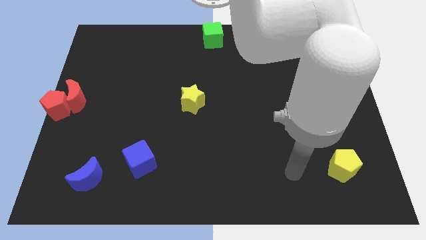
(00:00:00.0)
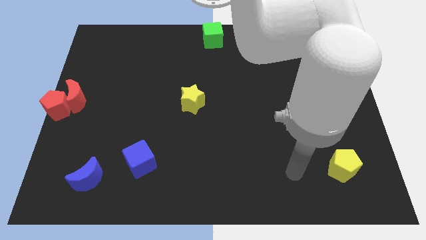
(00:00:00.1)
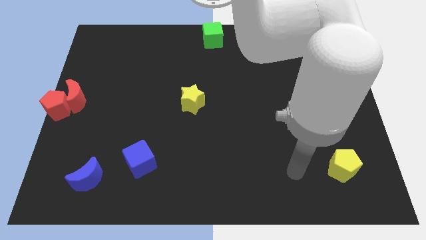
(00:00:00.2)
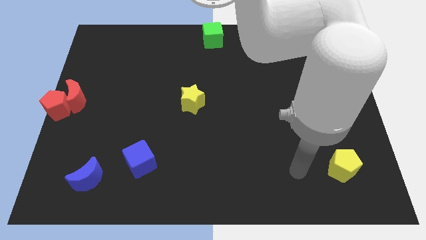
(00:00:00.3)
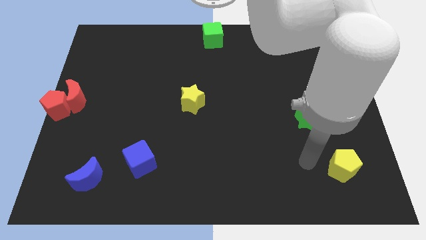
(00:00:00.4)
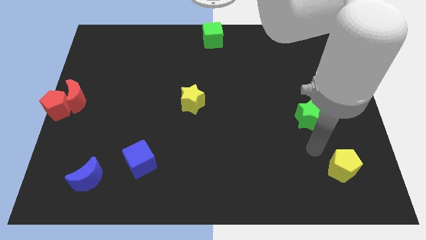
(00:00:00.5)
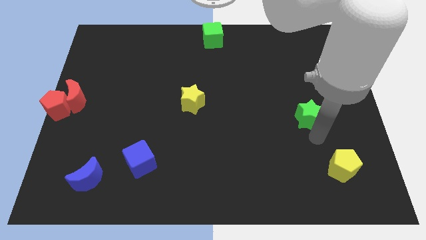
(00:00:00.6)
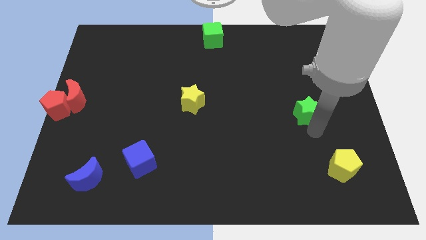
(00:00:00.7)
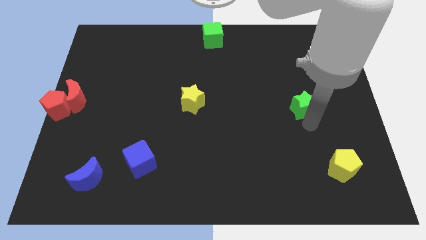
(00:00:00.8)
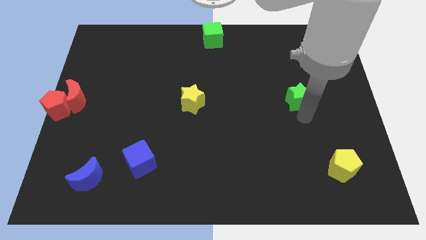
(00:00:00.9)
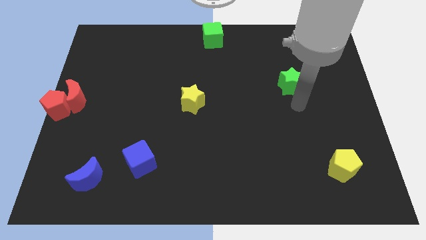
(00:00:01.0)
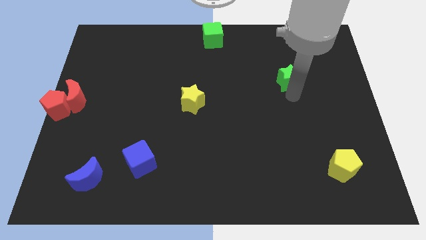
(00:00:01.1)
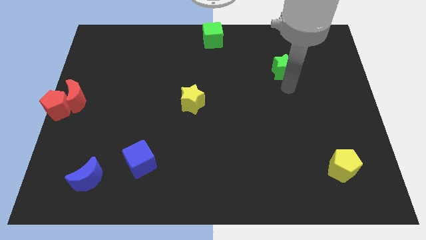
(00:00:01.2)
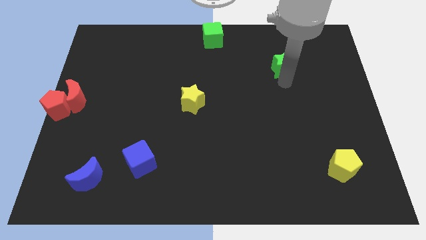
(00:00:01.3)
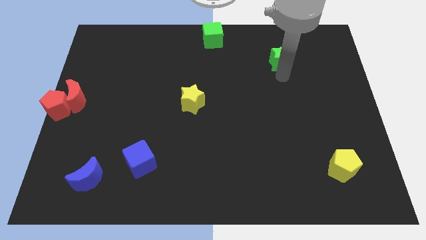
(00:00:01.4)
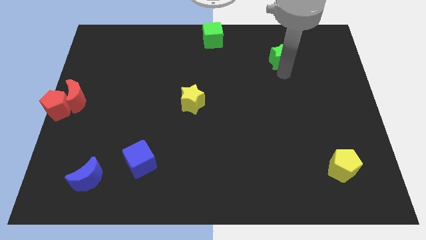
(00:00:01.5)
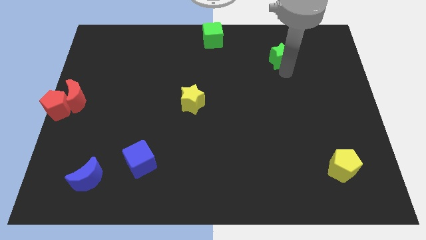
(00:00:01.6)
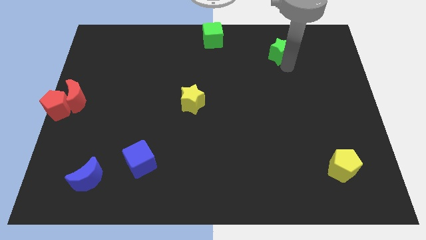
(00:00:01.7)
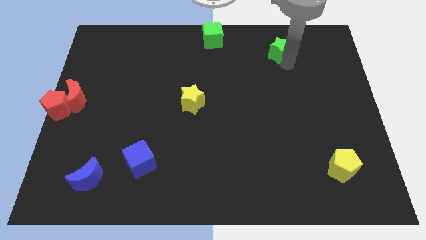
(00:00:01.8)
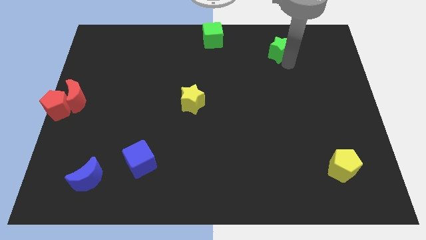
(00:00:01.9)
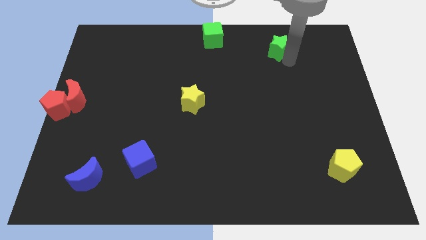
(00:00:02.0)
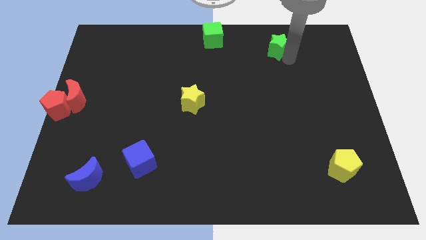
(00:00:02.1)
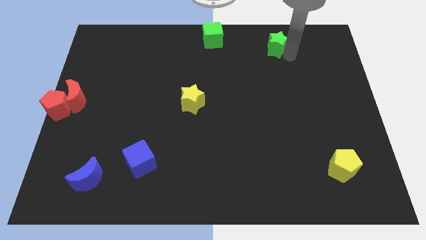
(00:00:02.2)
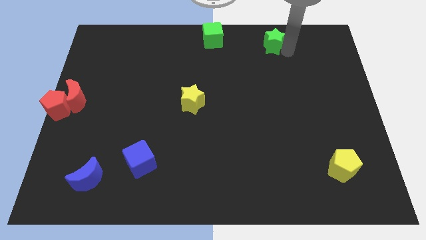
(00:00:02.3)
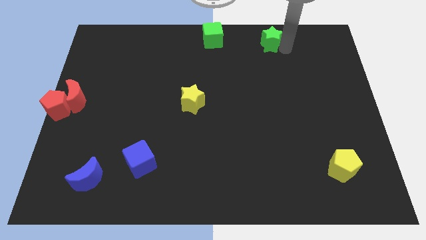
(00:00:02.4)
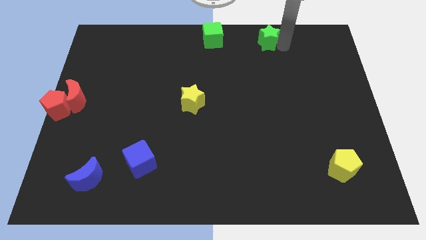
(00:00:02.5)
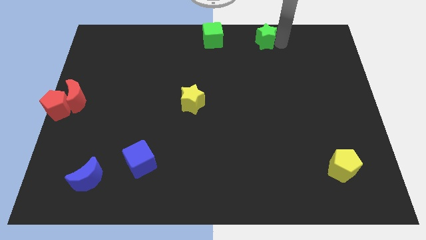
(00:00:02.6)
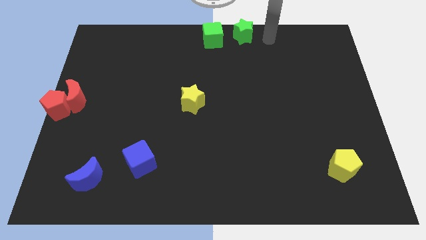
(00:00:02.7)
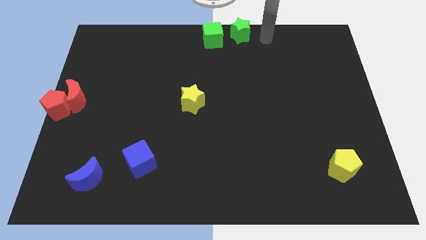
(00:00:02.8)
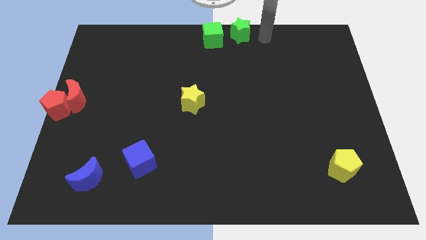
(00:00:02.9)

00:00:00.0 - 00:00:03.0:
move the green star right to the green cube

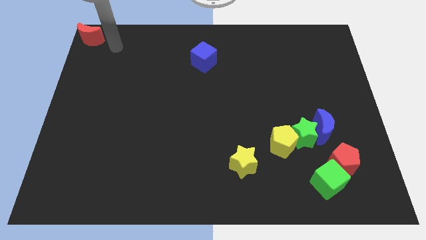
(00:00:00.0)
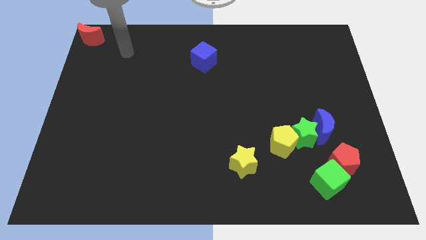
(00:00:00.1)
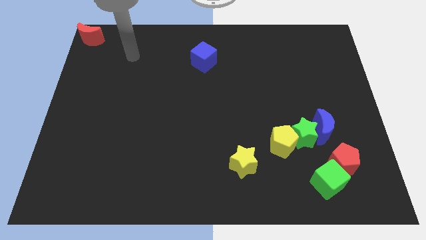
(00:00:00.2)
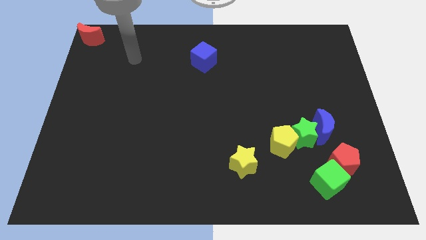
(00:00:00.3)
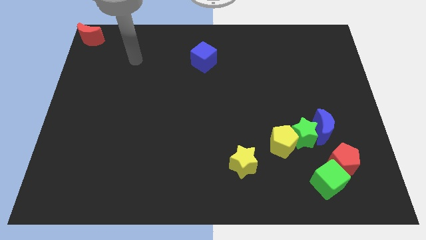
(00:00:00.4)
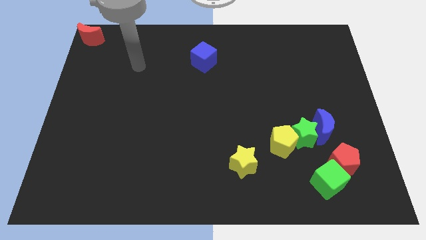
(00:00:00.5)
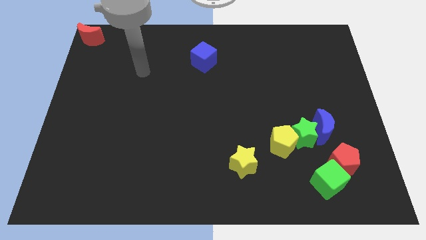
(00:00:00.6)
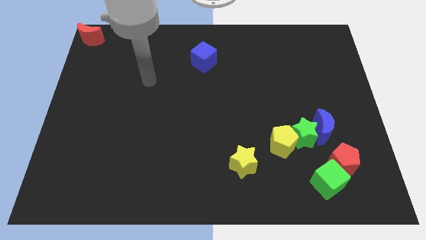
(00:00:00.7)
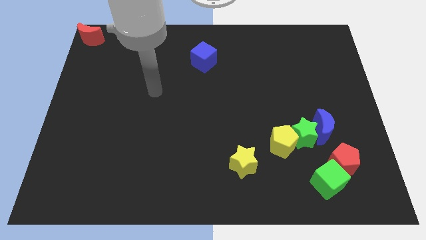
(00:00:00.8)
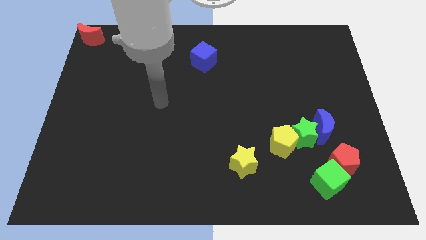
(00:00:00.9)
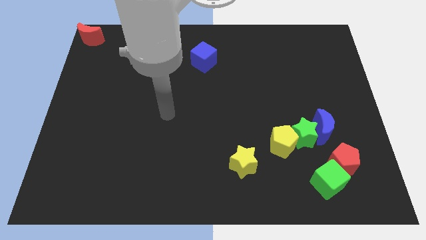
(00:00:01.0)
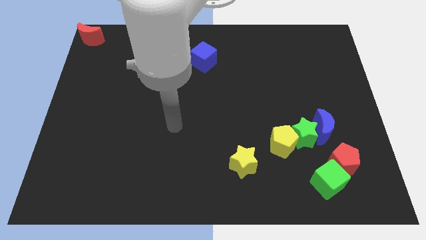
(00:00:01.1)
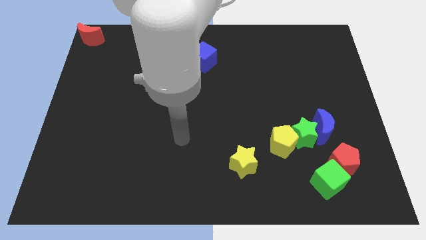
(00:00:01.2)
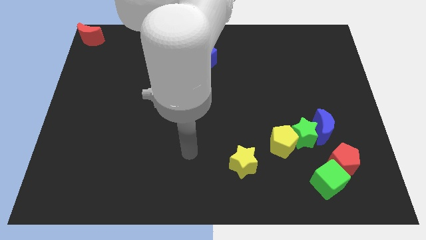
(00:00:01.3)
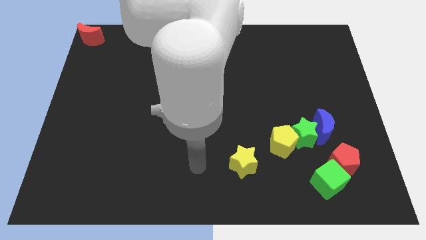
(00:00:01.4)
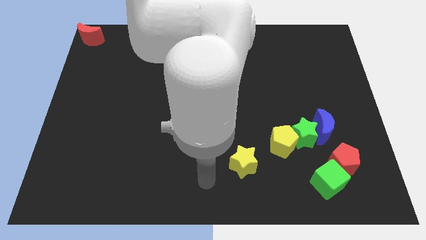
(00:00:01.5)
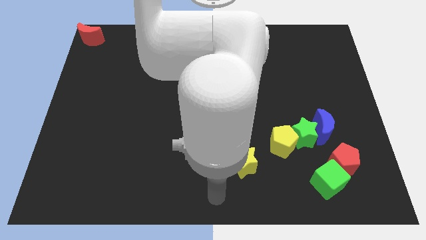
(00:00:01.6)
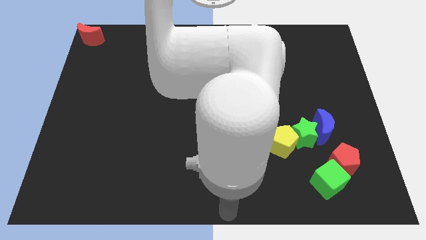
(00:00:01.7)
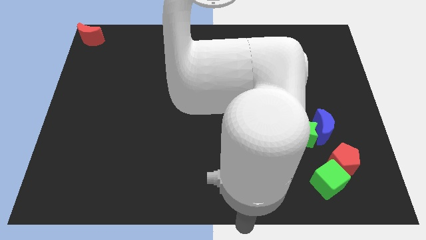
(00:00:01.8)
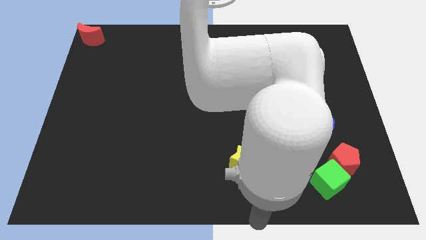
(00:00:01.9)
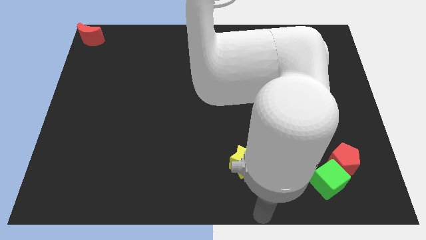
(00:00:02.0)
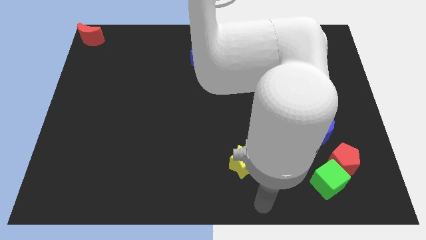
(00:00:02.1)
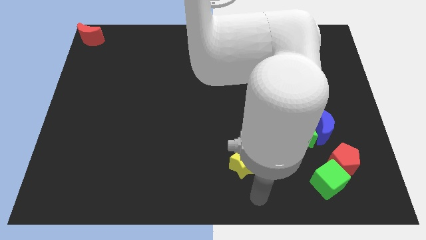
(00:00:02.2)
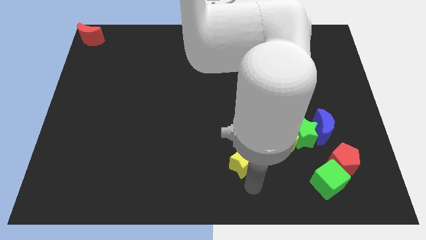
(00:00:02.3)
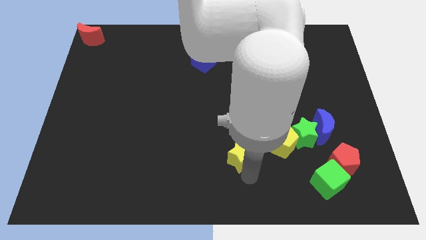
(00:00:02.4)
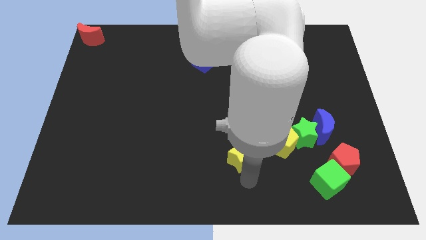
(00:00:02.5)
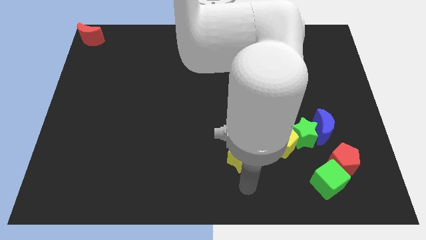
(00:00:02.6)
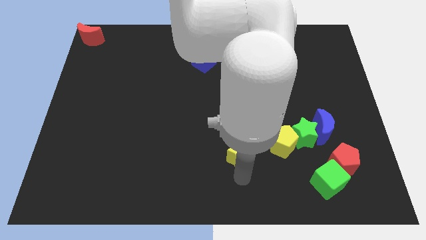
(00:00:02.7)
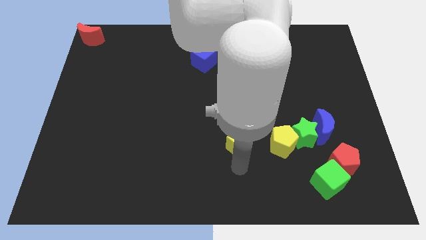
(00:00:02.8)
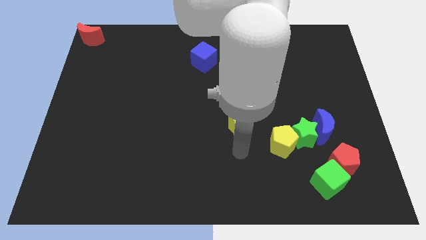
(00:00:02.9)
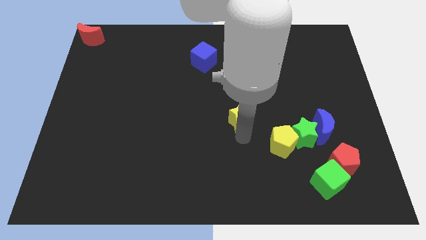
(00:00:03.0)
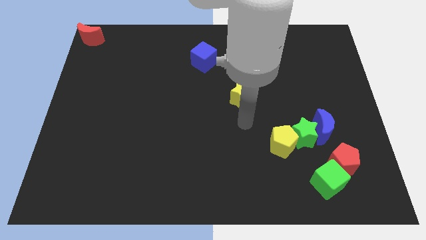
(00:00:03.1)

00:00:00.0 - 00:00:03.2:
move the yellow star to the top left of the yellow pentagon

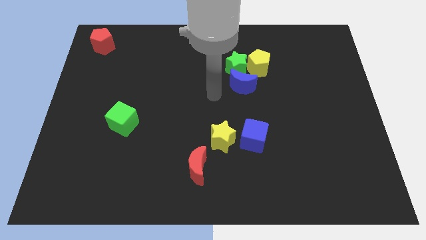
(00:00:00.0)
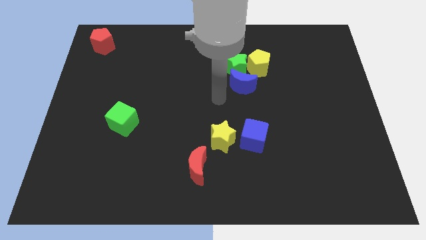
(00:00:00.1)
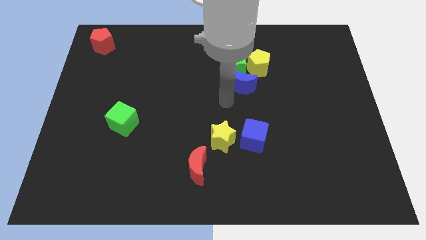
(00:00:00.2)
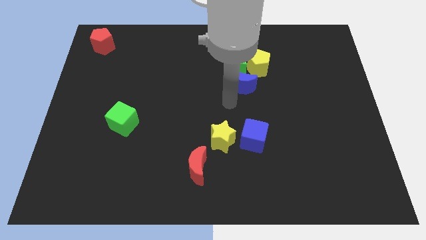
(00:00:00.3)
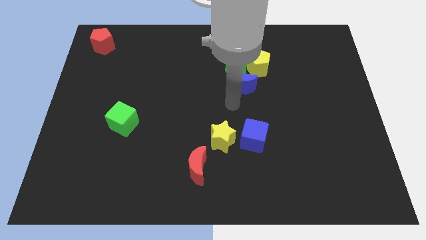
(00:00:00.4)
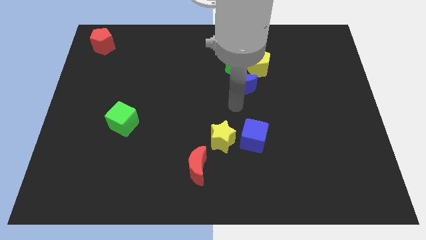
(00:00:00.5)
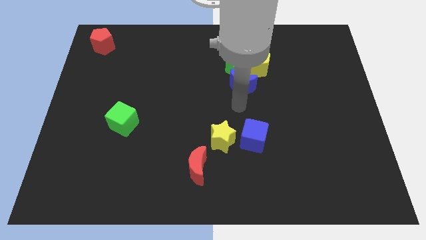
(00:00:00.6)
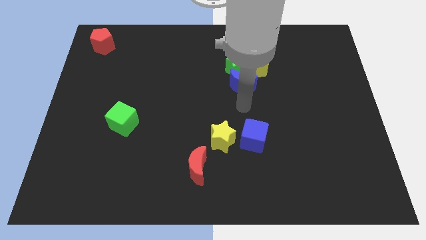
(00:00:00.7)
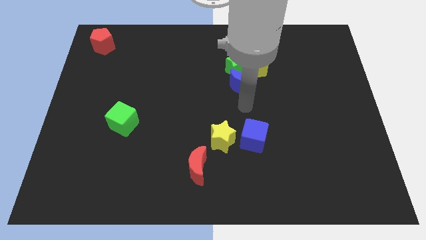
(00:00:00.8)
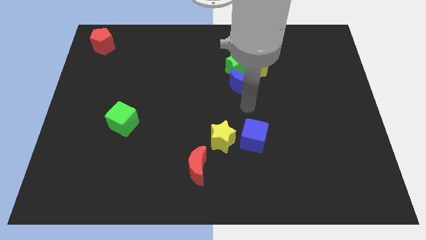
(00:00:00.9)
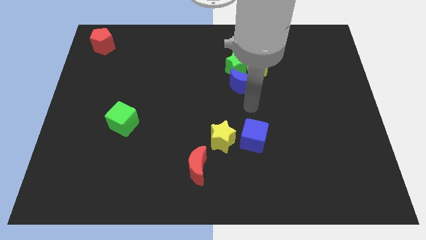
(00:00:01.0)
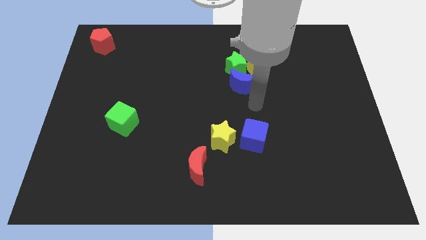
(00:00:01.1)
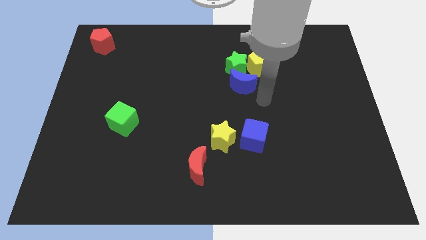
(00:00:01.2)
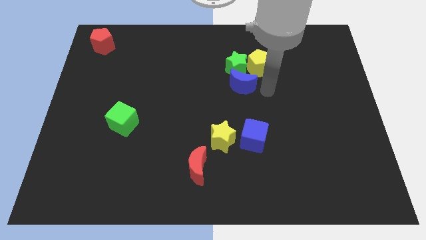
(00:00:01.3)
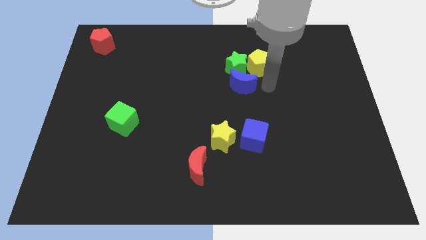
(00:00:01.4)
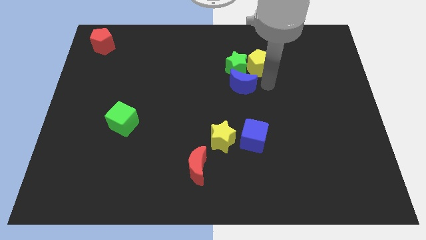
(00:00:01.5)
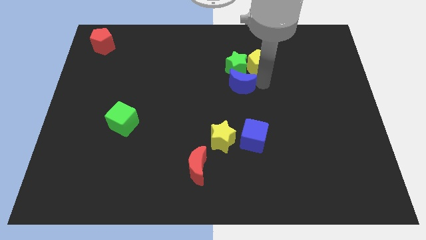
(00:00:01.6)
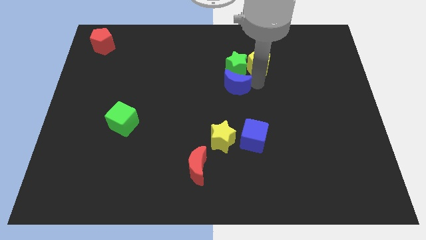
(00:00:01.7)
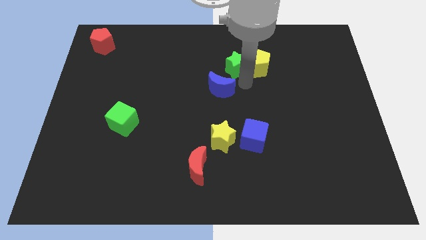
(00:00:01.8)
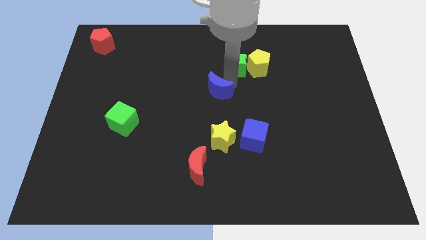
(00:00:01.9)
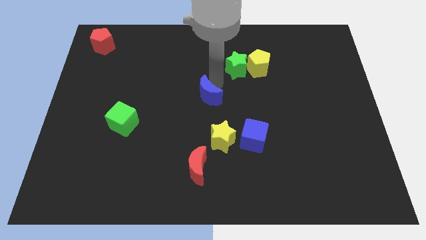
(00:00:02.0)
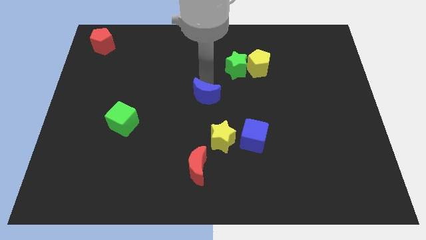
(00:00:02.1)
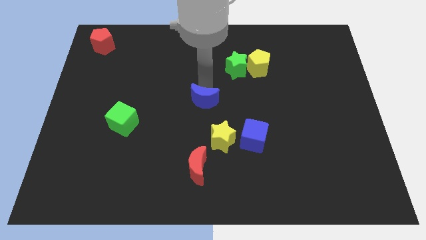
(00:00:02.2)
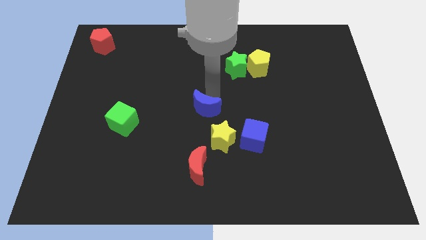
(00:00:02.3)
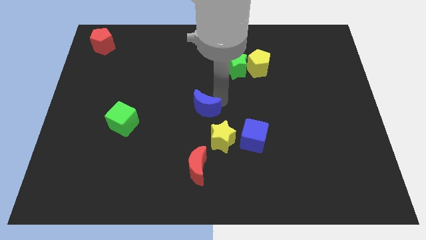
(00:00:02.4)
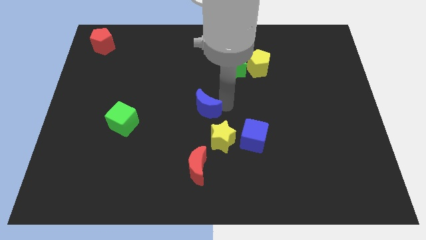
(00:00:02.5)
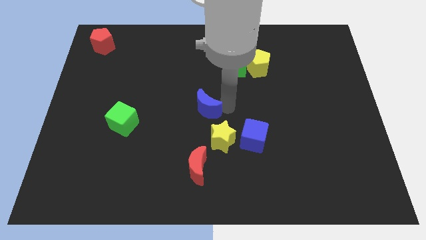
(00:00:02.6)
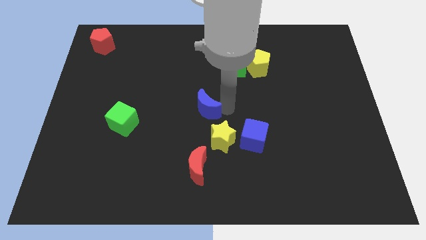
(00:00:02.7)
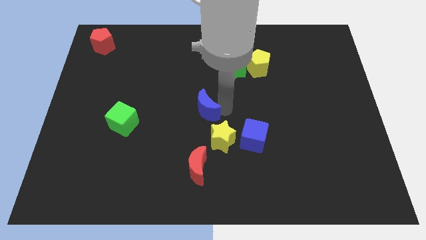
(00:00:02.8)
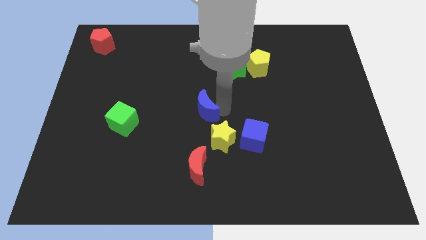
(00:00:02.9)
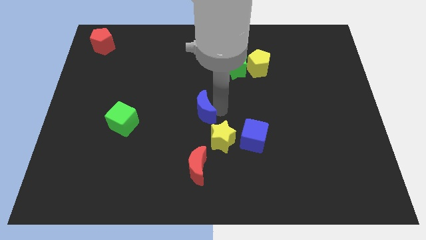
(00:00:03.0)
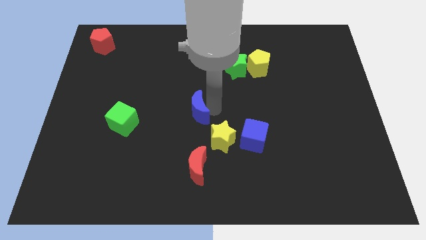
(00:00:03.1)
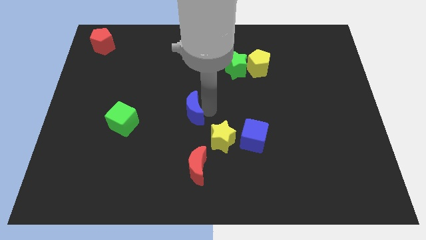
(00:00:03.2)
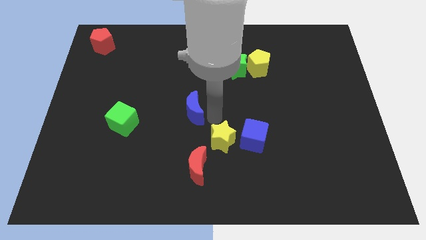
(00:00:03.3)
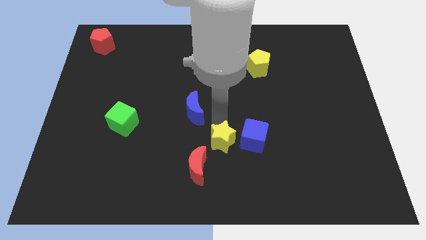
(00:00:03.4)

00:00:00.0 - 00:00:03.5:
move the blue crescent above the red moon
